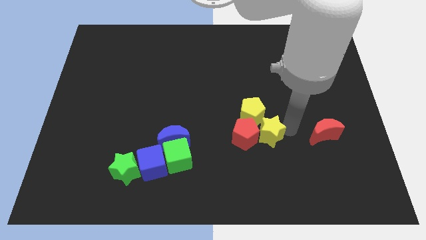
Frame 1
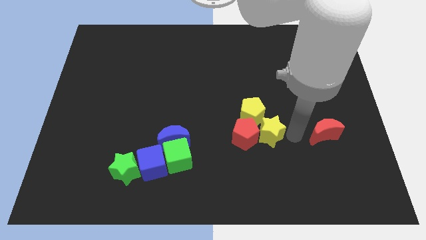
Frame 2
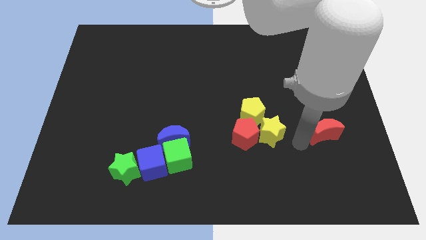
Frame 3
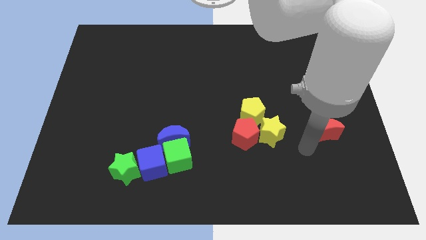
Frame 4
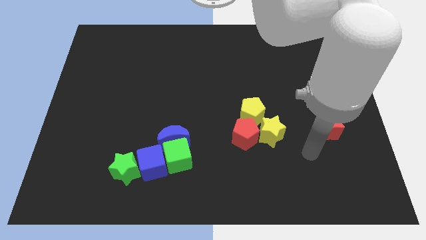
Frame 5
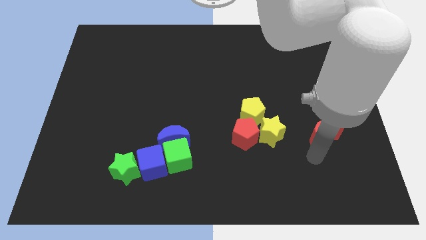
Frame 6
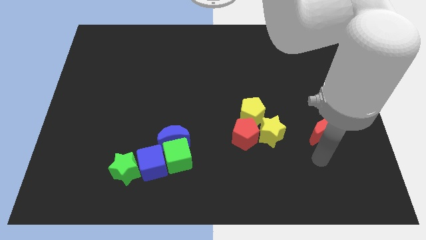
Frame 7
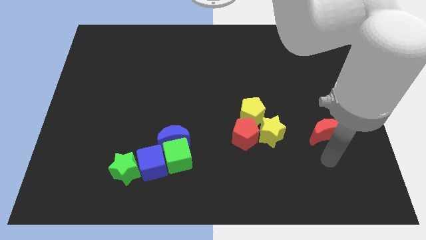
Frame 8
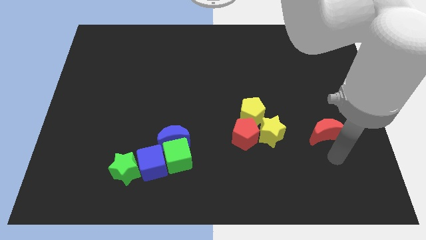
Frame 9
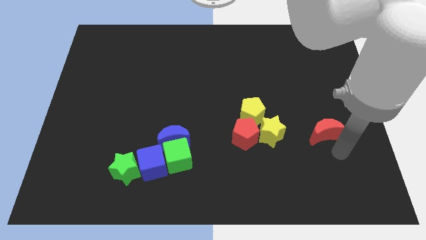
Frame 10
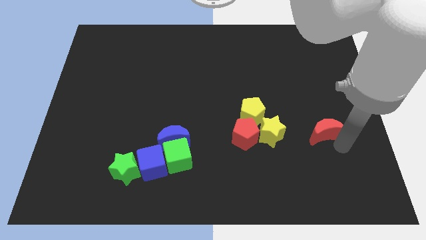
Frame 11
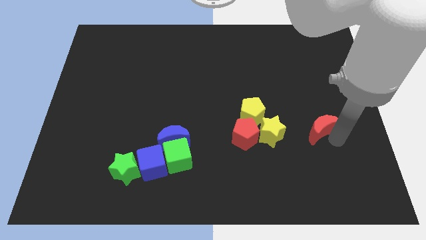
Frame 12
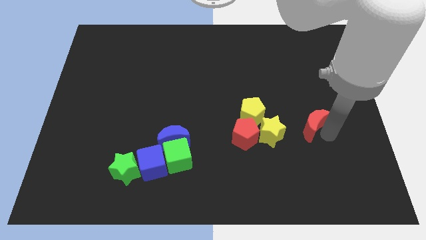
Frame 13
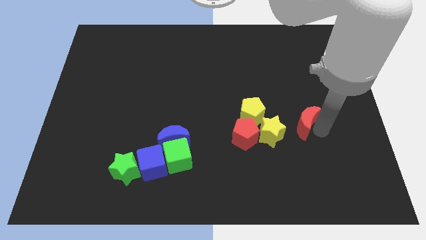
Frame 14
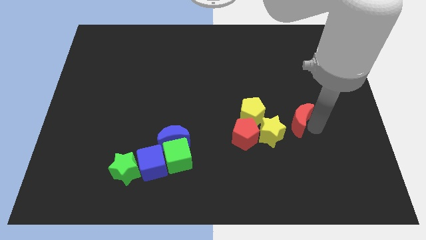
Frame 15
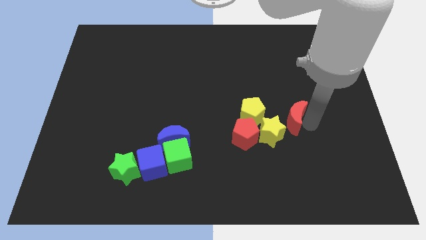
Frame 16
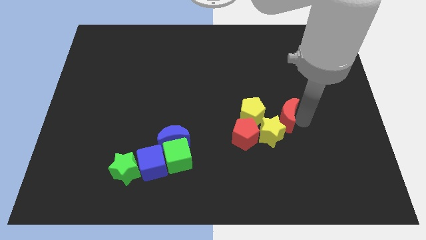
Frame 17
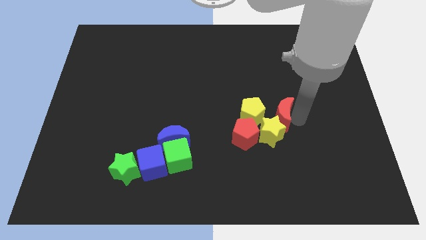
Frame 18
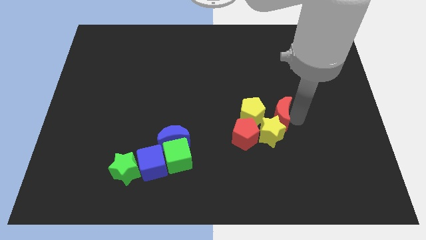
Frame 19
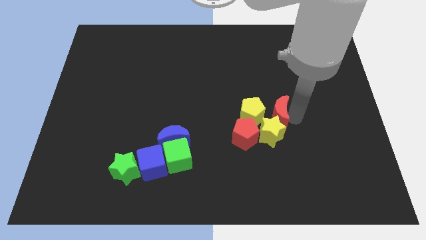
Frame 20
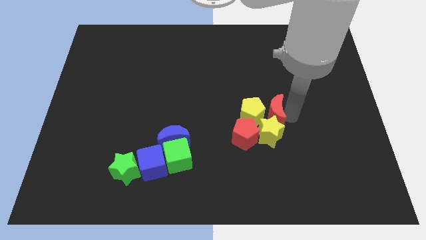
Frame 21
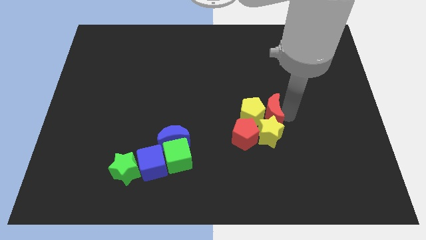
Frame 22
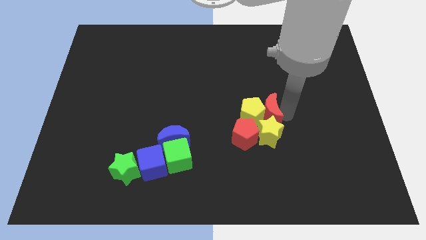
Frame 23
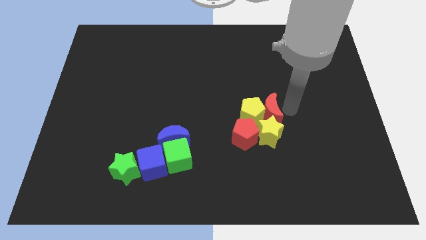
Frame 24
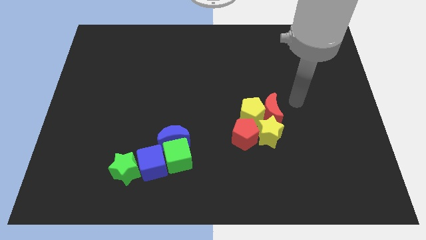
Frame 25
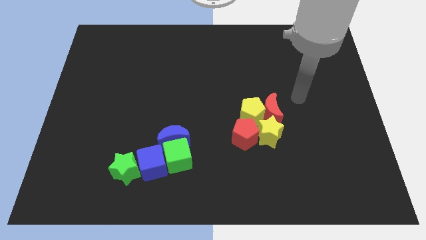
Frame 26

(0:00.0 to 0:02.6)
drag red moon towards yellow blocks

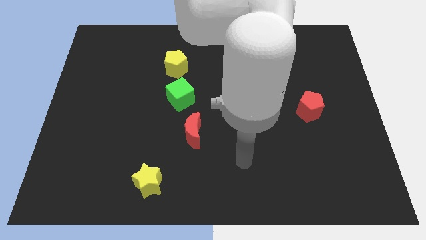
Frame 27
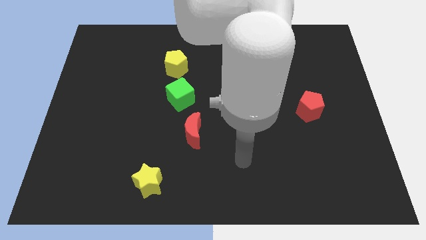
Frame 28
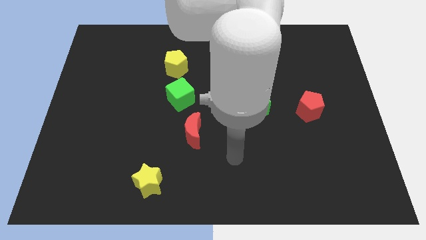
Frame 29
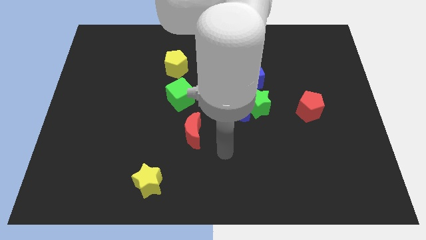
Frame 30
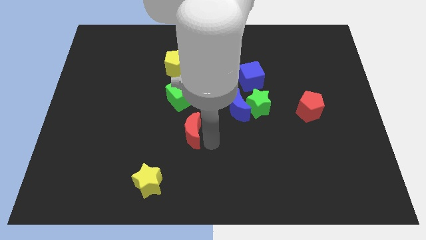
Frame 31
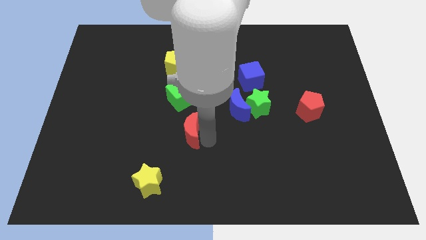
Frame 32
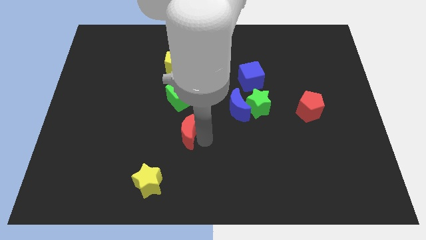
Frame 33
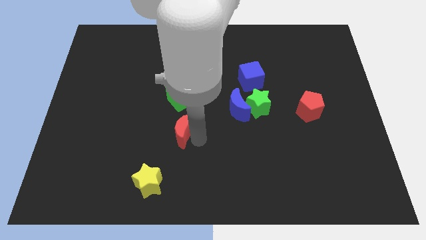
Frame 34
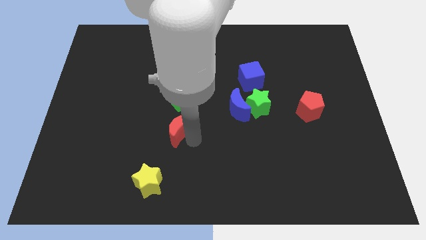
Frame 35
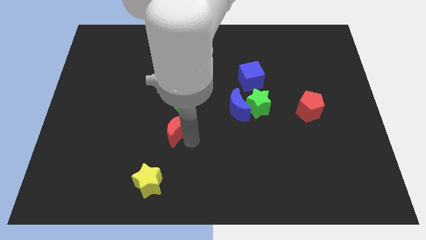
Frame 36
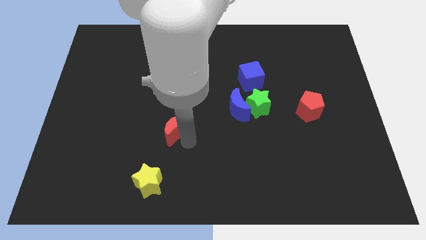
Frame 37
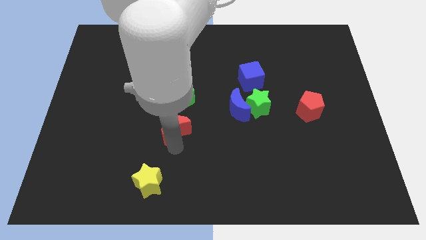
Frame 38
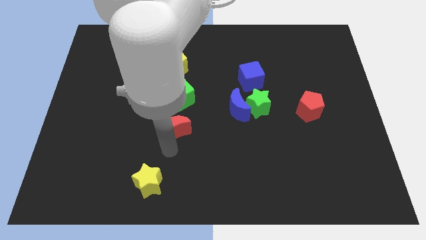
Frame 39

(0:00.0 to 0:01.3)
place red moon to the bottom of green cube

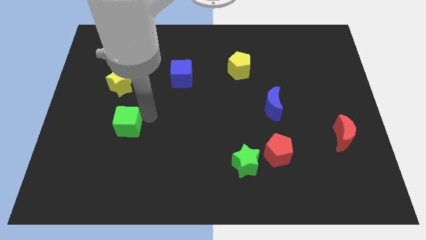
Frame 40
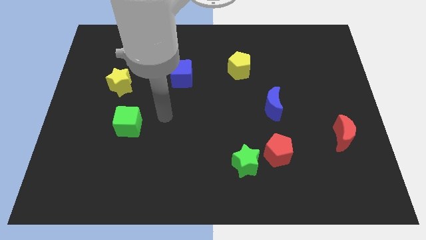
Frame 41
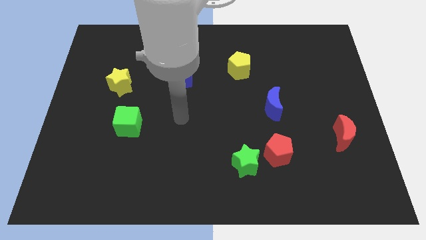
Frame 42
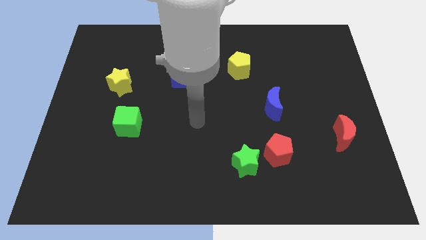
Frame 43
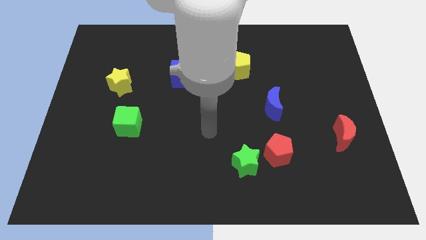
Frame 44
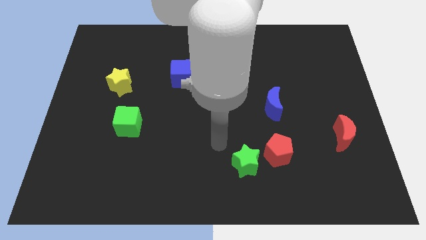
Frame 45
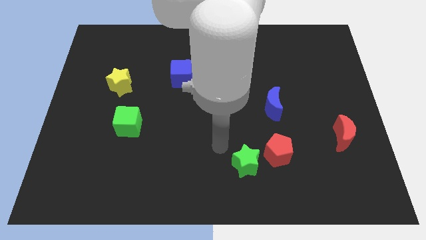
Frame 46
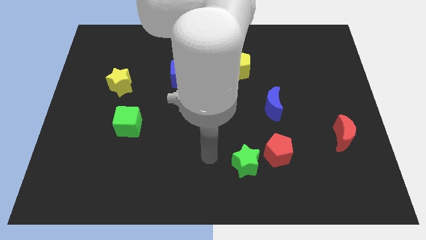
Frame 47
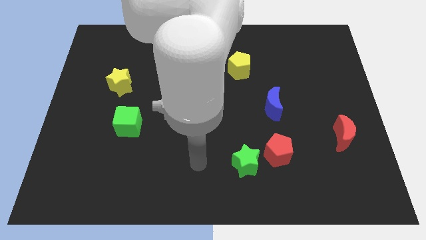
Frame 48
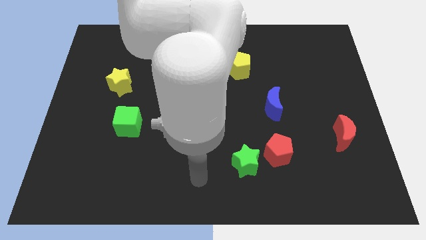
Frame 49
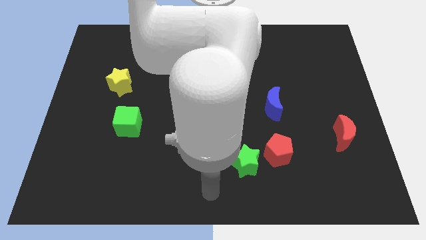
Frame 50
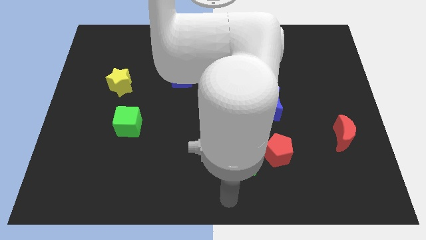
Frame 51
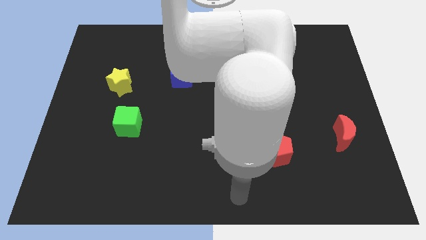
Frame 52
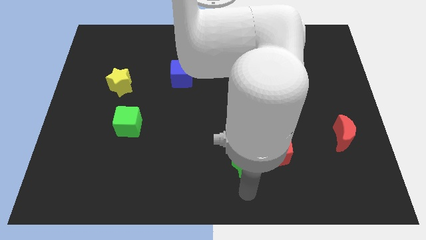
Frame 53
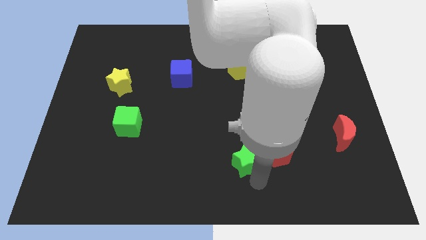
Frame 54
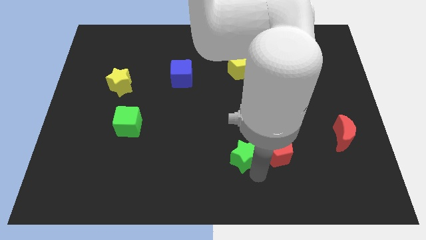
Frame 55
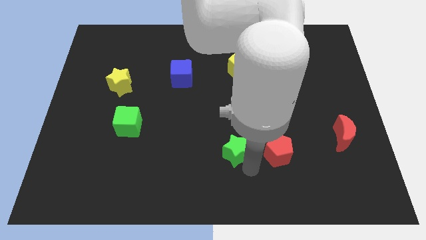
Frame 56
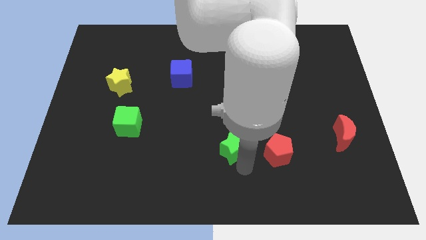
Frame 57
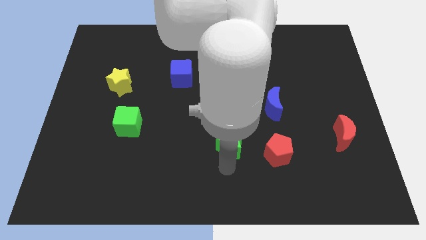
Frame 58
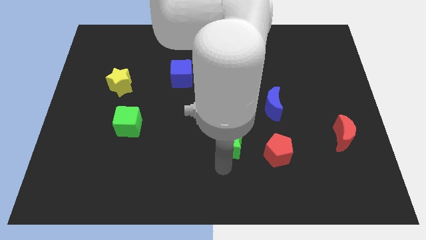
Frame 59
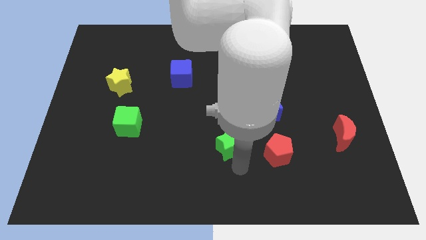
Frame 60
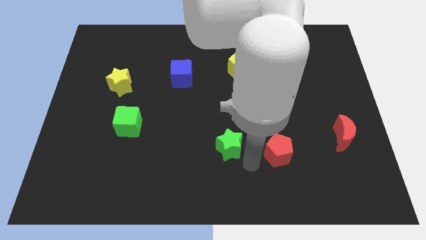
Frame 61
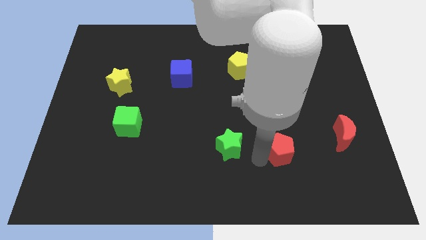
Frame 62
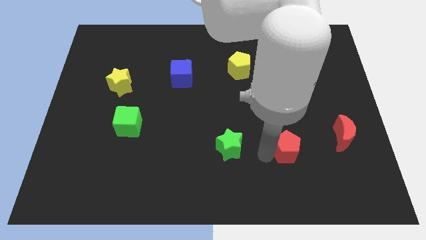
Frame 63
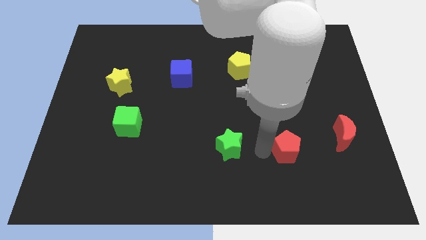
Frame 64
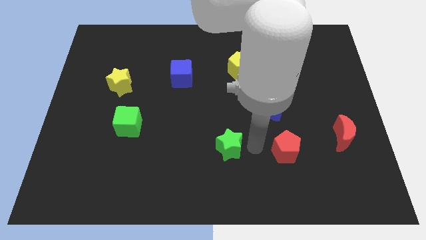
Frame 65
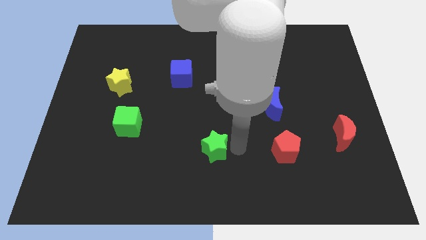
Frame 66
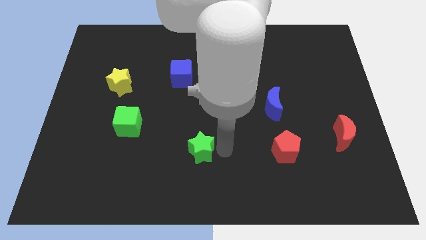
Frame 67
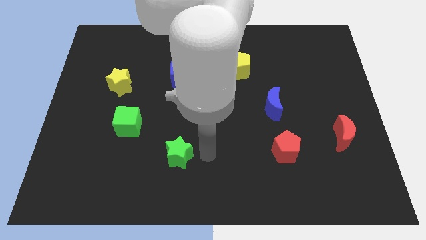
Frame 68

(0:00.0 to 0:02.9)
move the green star vertical to the blue cube

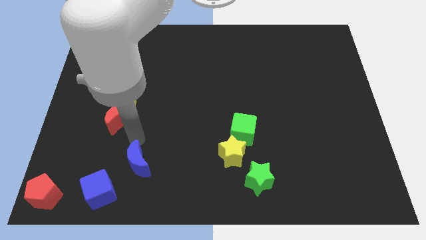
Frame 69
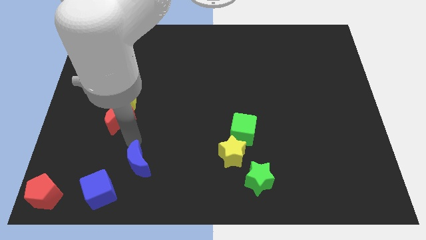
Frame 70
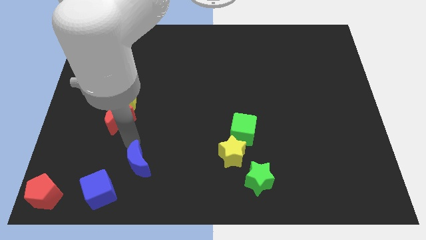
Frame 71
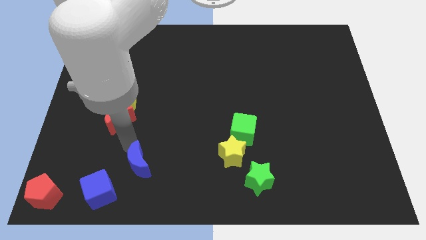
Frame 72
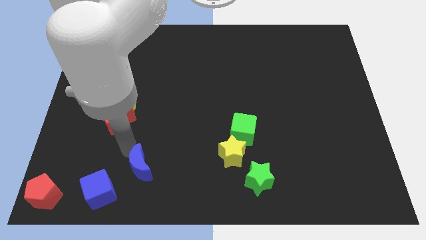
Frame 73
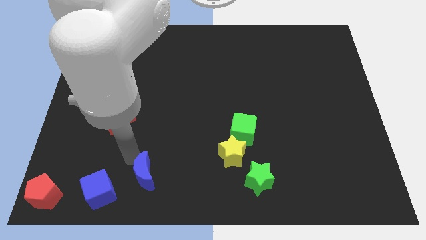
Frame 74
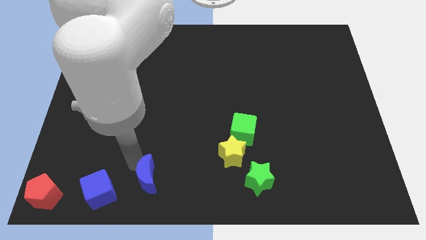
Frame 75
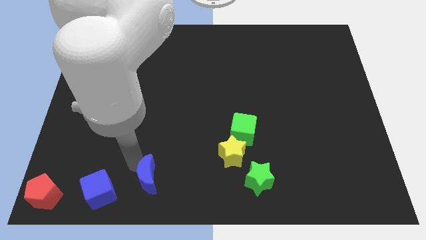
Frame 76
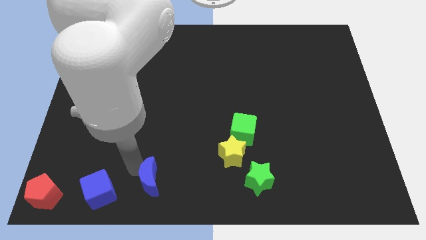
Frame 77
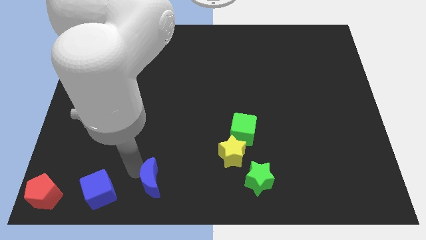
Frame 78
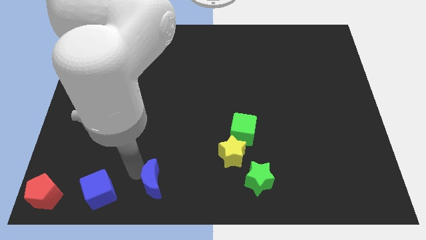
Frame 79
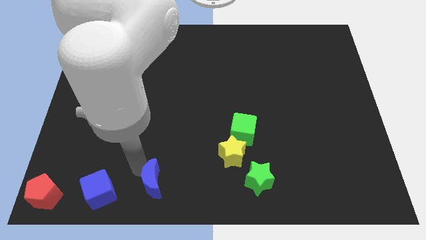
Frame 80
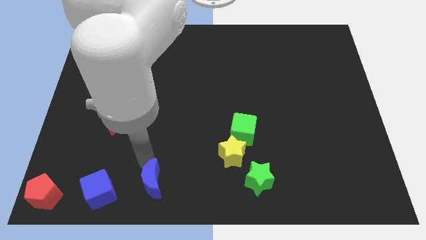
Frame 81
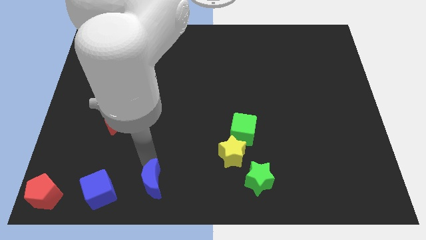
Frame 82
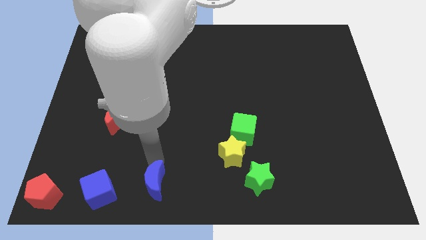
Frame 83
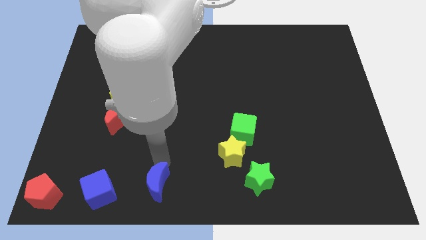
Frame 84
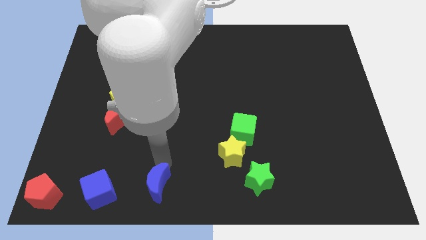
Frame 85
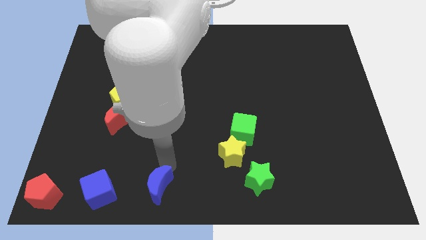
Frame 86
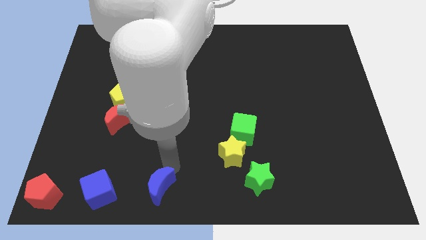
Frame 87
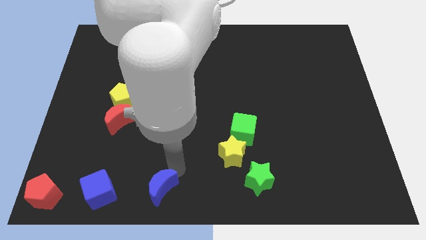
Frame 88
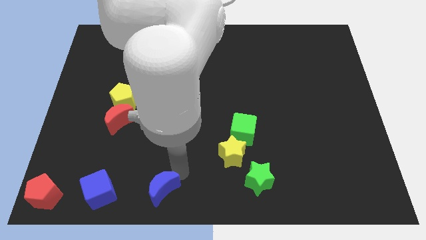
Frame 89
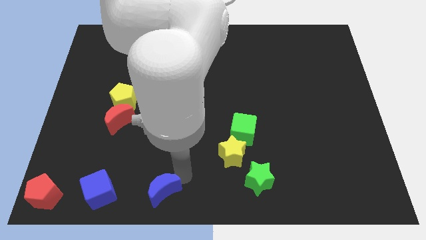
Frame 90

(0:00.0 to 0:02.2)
move the blue moon towards the right side of the blue cube
